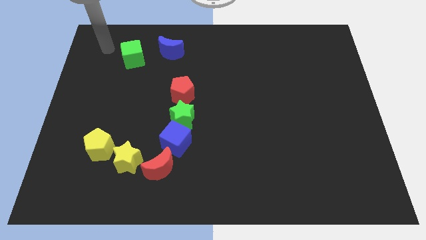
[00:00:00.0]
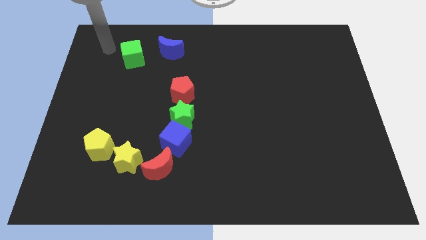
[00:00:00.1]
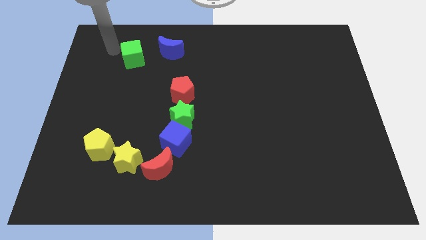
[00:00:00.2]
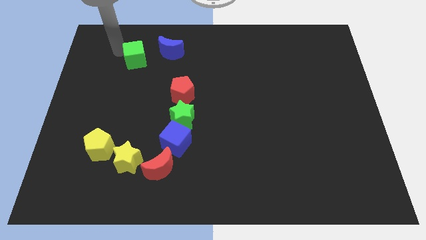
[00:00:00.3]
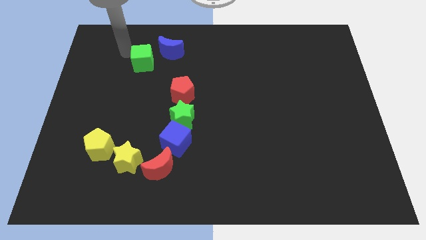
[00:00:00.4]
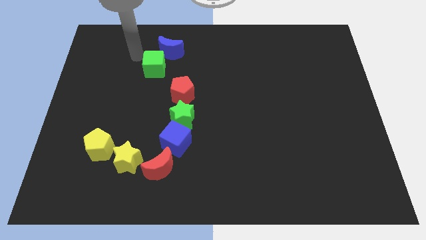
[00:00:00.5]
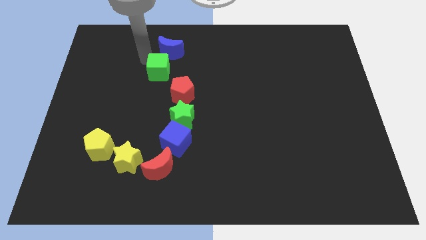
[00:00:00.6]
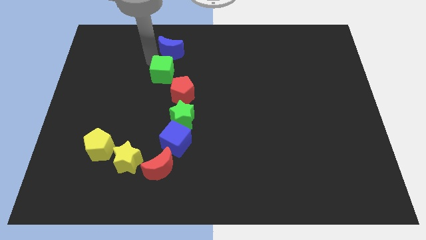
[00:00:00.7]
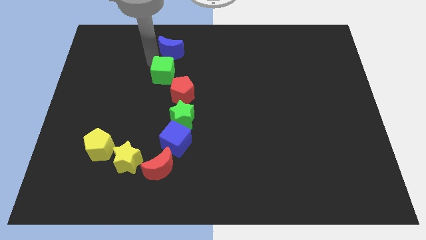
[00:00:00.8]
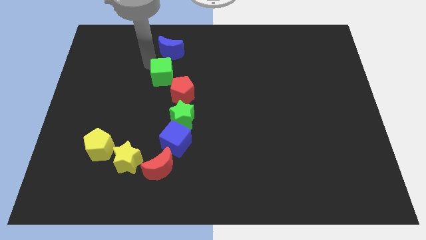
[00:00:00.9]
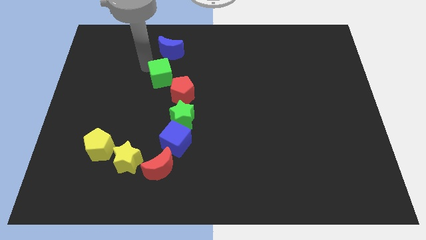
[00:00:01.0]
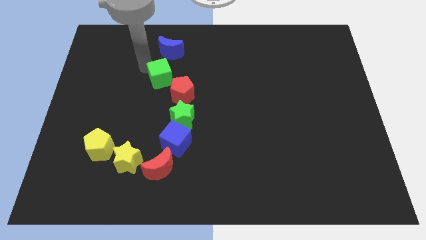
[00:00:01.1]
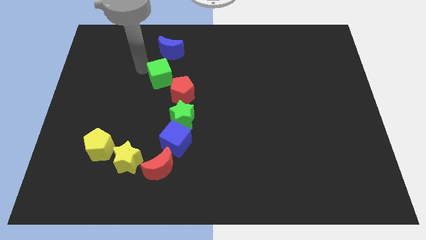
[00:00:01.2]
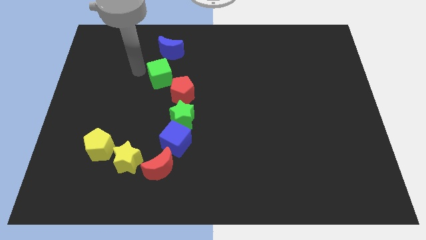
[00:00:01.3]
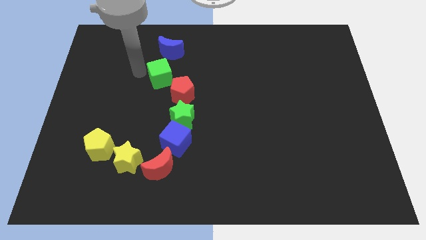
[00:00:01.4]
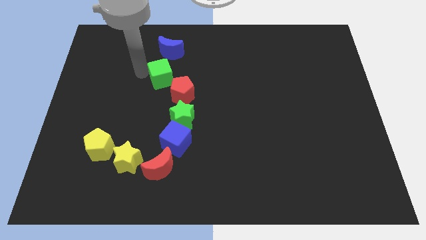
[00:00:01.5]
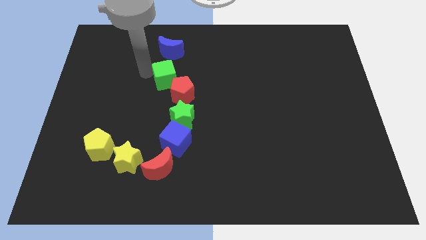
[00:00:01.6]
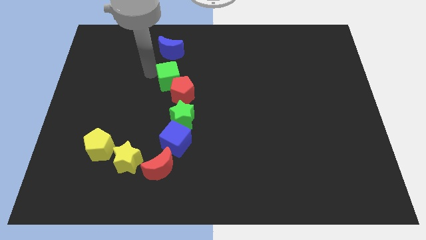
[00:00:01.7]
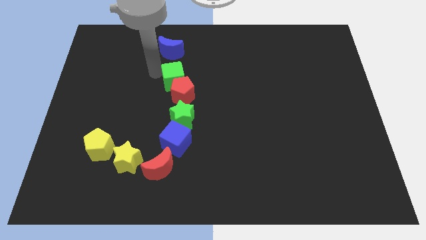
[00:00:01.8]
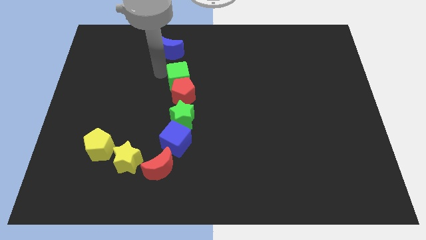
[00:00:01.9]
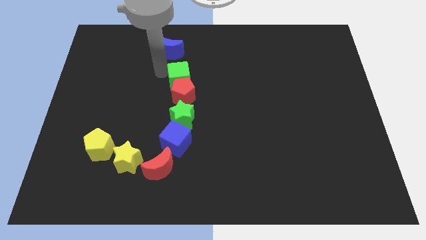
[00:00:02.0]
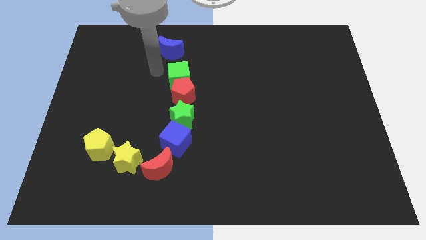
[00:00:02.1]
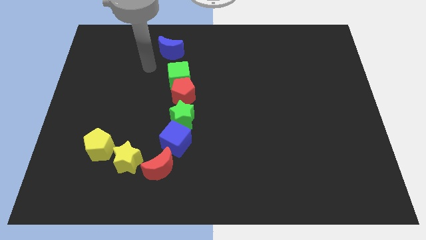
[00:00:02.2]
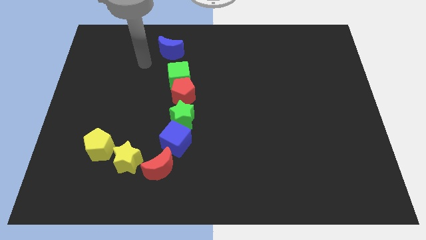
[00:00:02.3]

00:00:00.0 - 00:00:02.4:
push the green cube into red pentagon

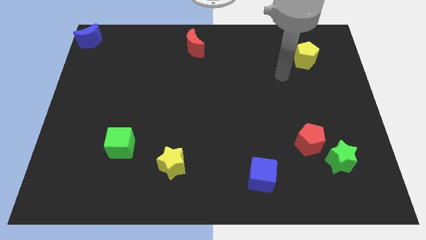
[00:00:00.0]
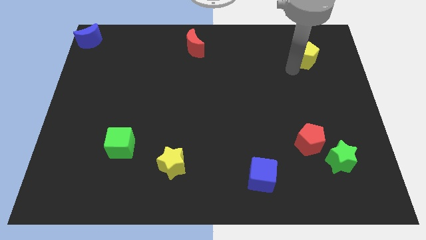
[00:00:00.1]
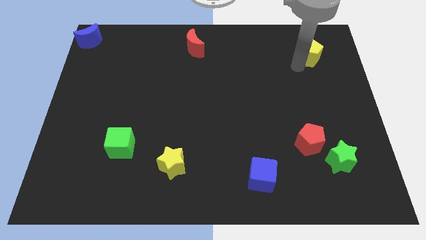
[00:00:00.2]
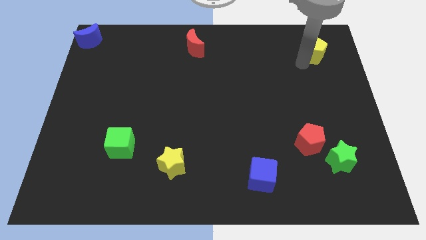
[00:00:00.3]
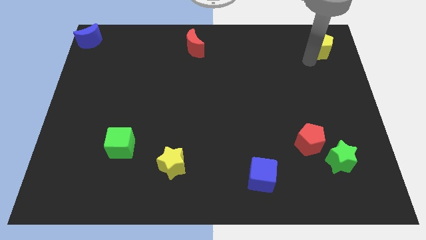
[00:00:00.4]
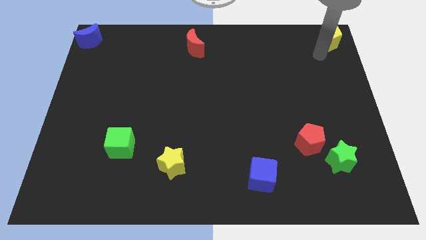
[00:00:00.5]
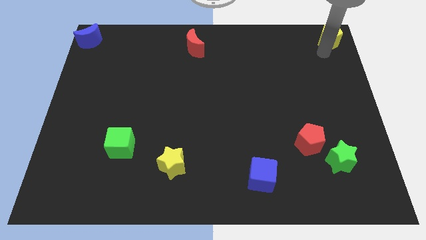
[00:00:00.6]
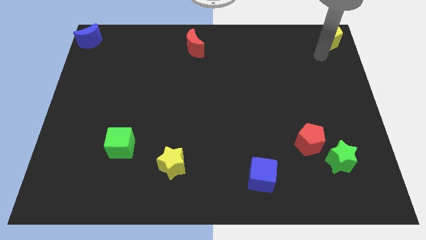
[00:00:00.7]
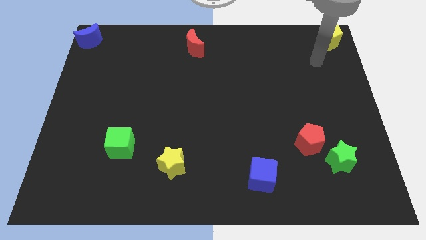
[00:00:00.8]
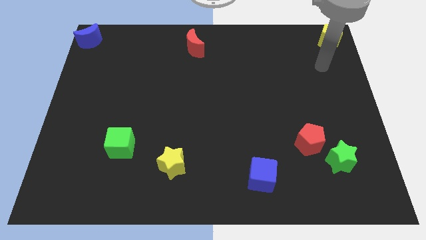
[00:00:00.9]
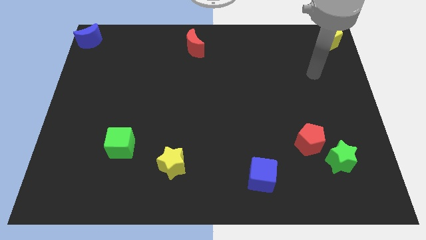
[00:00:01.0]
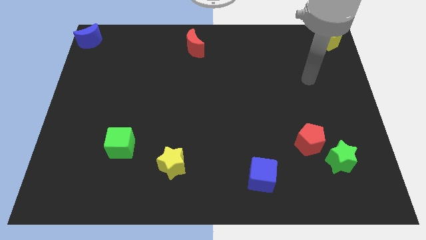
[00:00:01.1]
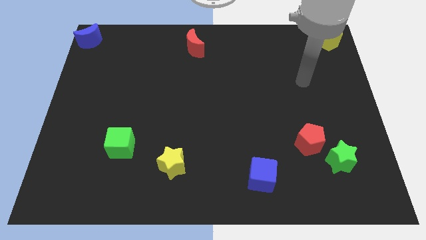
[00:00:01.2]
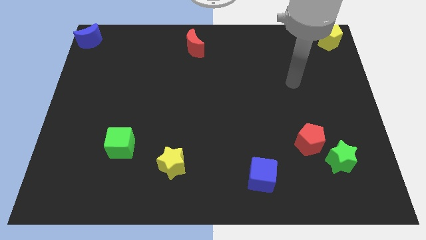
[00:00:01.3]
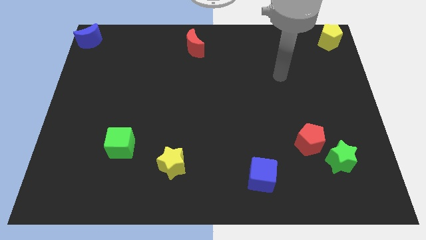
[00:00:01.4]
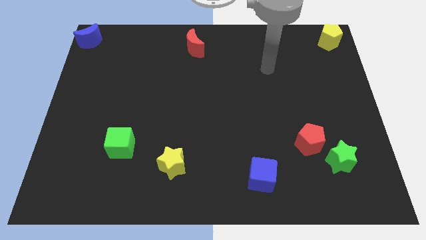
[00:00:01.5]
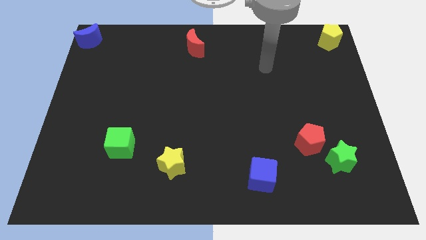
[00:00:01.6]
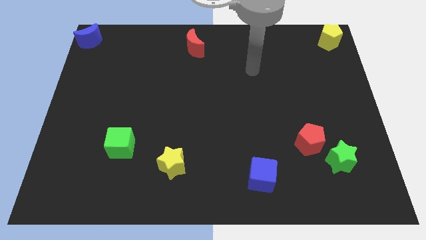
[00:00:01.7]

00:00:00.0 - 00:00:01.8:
push the yellow pentagon to the top right side

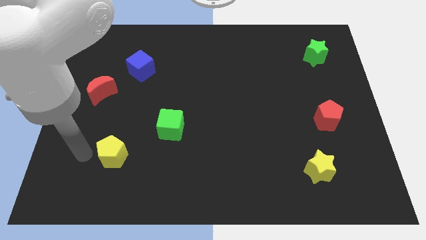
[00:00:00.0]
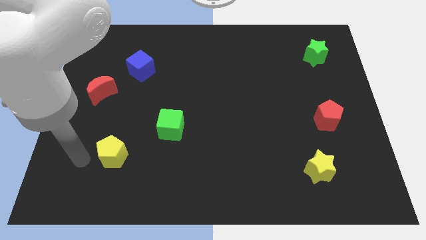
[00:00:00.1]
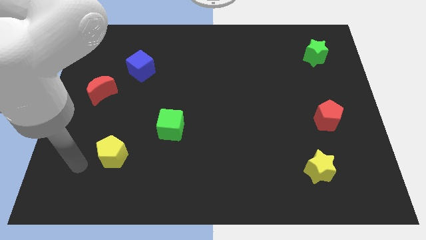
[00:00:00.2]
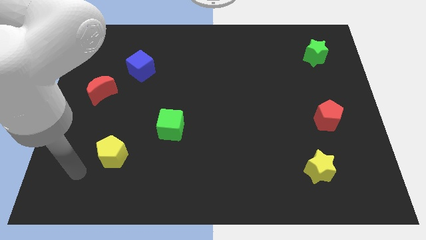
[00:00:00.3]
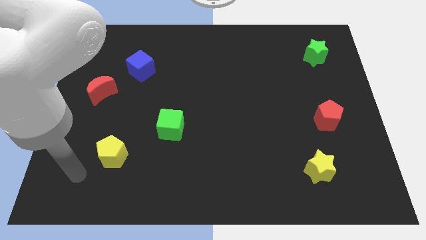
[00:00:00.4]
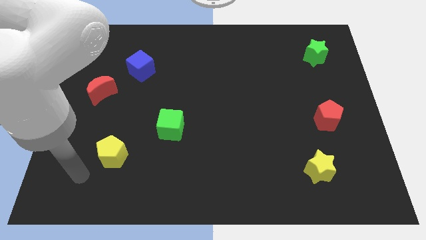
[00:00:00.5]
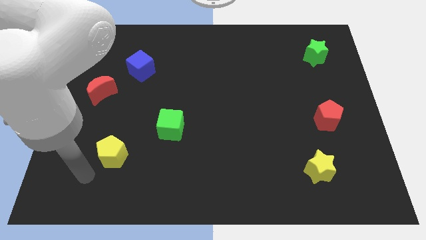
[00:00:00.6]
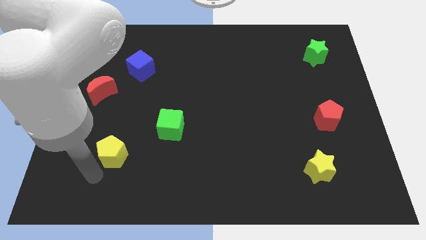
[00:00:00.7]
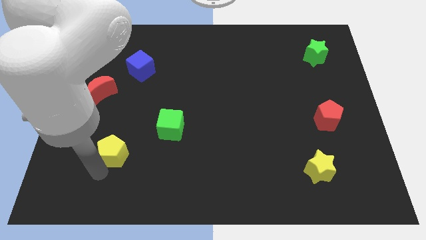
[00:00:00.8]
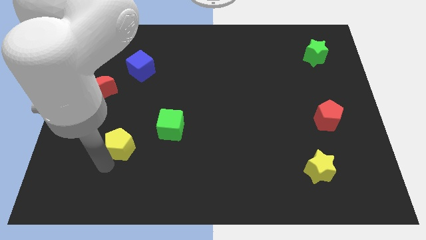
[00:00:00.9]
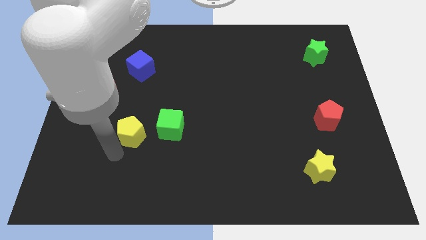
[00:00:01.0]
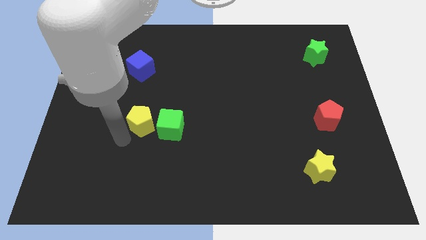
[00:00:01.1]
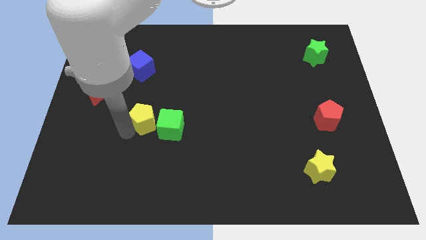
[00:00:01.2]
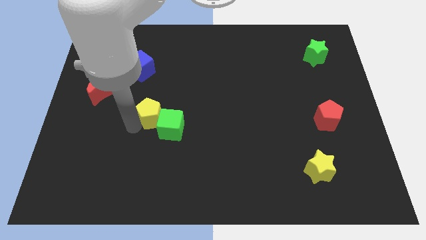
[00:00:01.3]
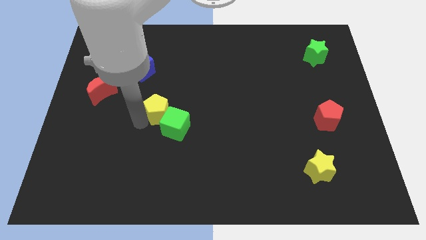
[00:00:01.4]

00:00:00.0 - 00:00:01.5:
push the yellow pentagon into the left side of the green cube

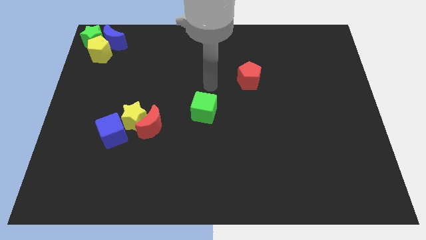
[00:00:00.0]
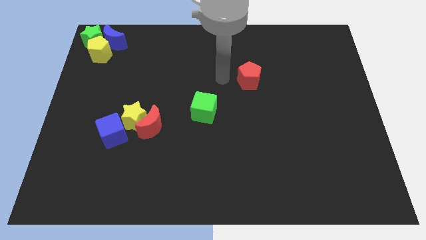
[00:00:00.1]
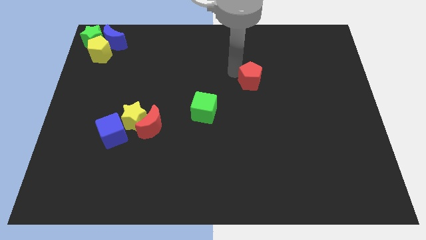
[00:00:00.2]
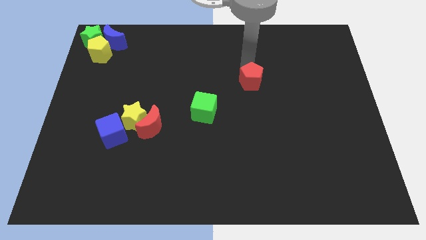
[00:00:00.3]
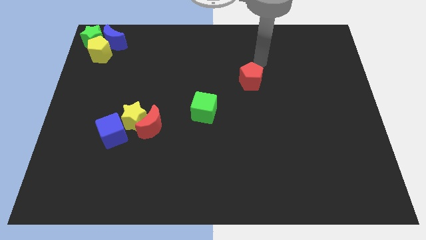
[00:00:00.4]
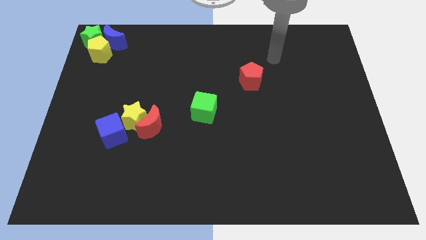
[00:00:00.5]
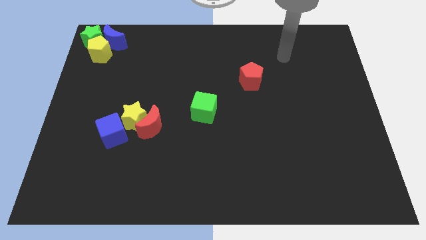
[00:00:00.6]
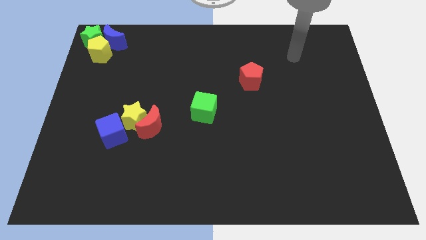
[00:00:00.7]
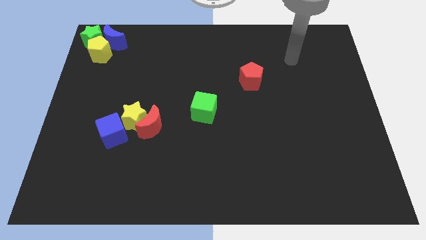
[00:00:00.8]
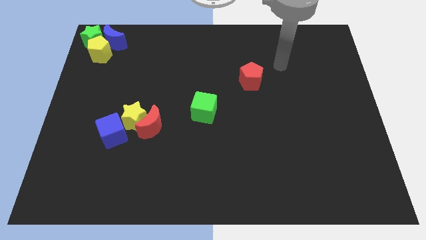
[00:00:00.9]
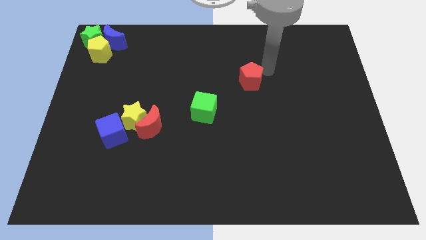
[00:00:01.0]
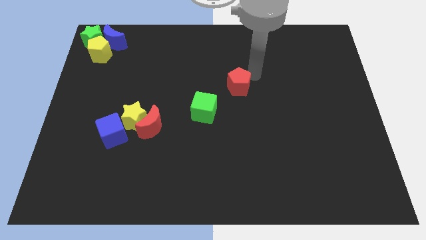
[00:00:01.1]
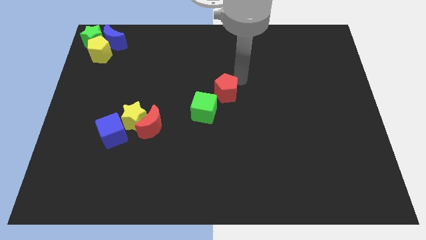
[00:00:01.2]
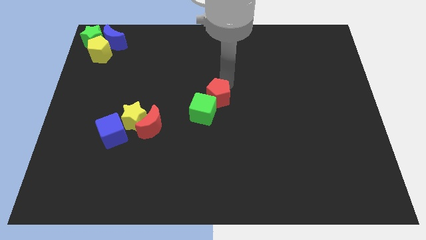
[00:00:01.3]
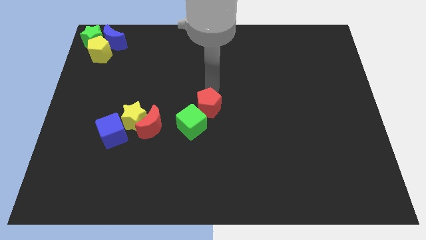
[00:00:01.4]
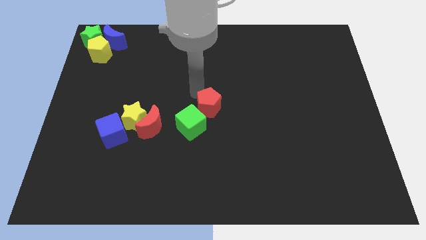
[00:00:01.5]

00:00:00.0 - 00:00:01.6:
push the red pentagon into the green cube

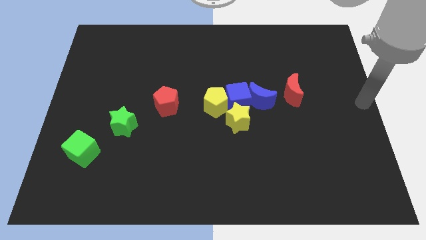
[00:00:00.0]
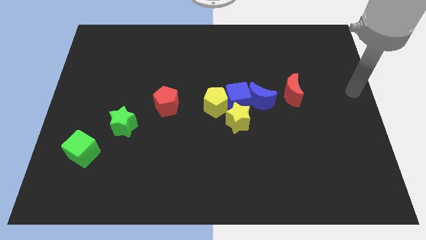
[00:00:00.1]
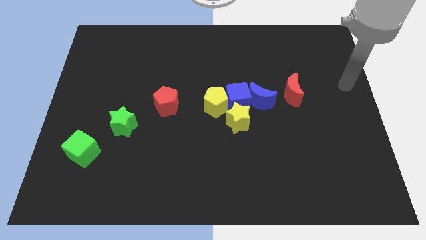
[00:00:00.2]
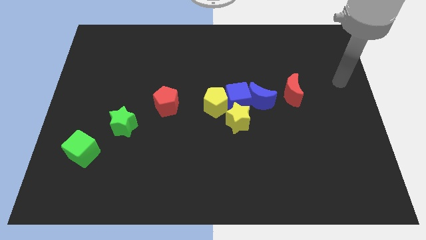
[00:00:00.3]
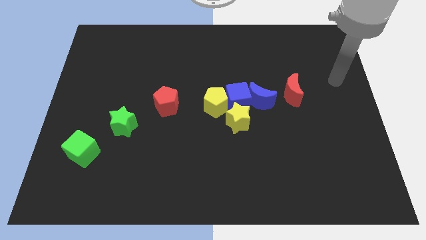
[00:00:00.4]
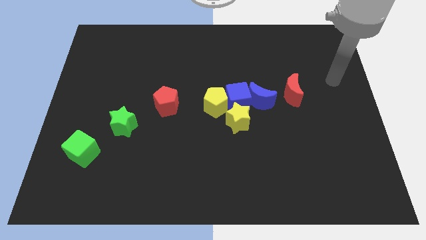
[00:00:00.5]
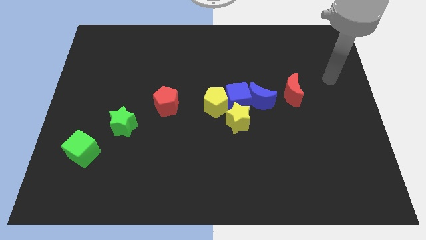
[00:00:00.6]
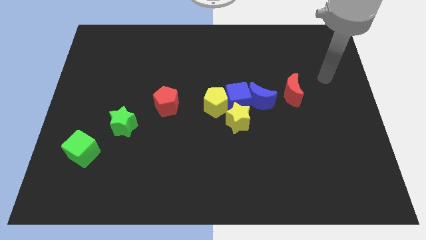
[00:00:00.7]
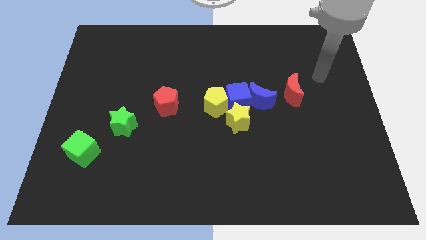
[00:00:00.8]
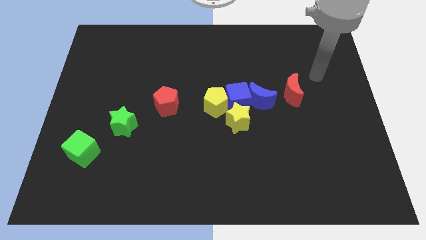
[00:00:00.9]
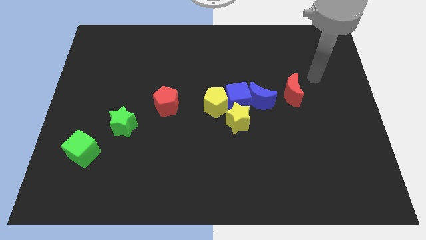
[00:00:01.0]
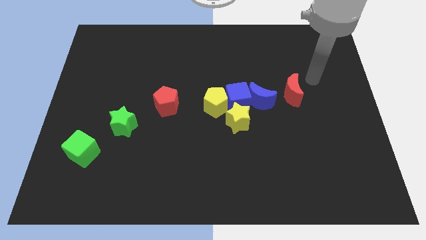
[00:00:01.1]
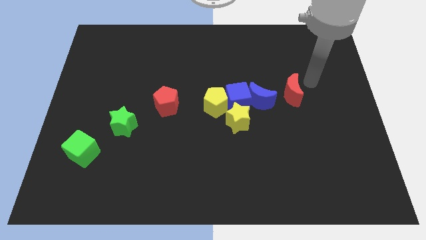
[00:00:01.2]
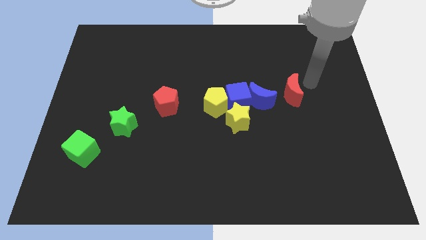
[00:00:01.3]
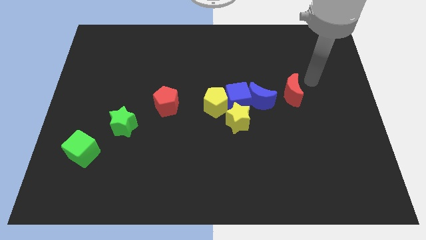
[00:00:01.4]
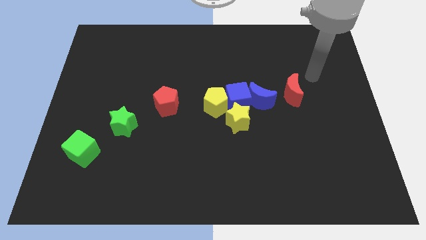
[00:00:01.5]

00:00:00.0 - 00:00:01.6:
point your arm at the right side of the red crescent
